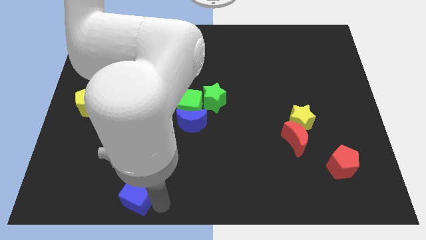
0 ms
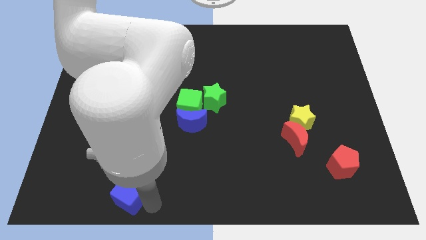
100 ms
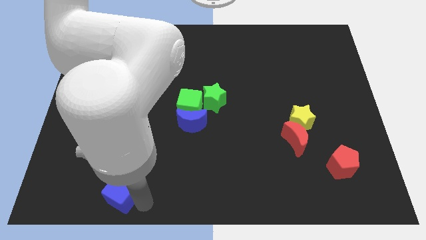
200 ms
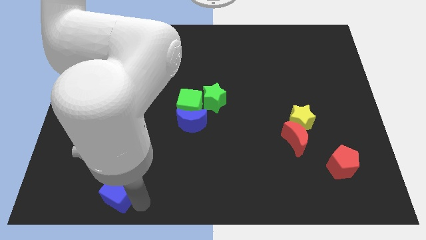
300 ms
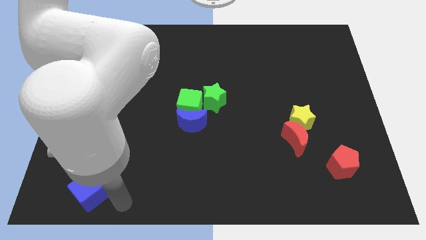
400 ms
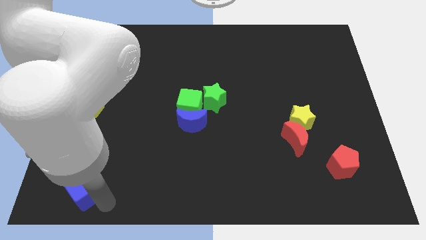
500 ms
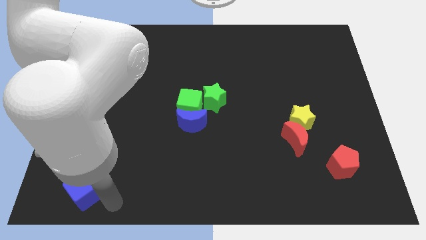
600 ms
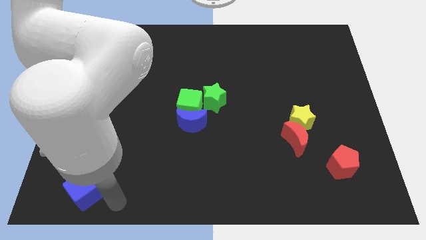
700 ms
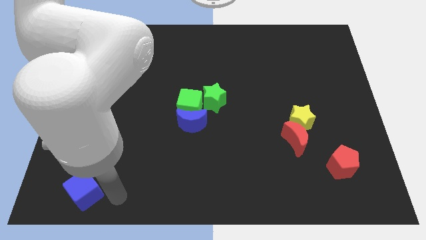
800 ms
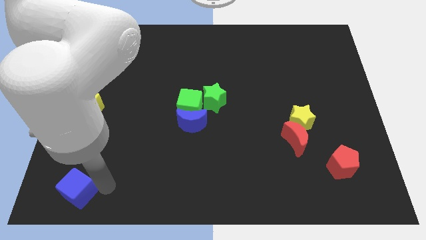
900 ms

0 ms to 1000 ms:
push blue cube below yellow pentagon

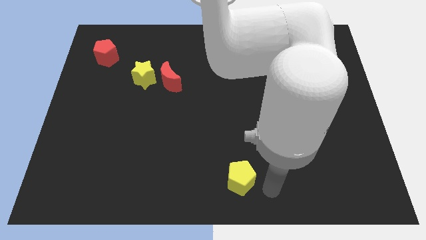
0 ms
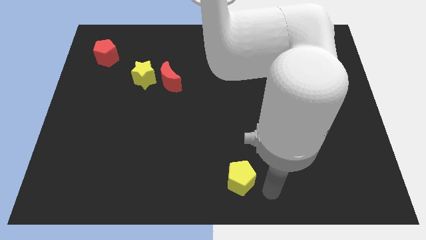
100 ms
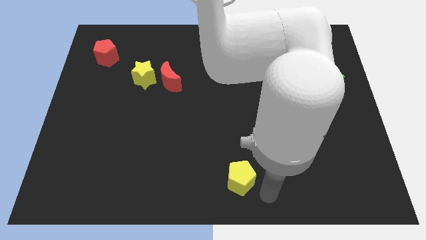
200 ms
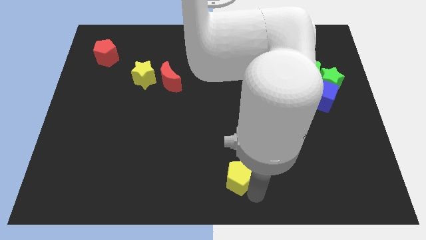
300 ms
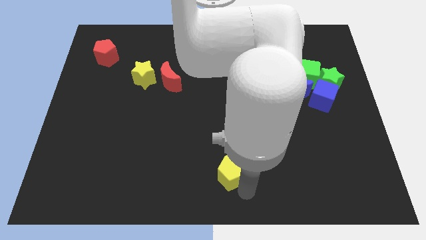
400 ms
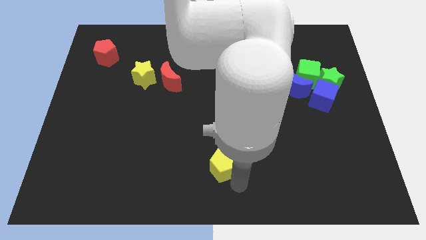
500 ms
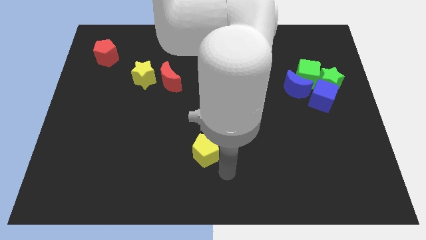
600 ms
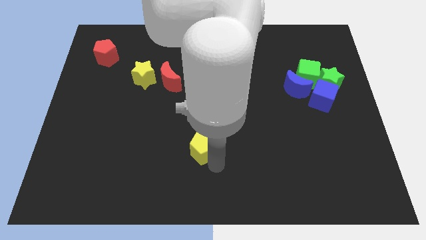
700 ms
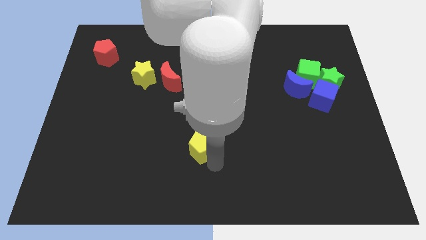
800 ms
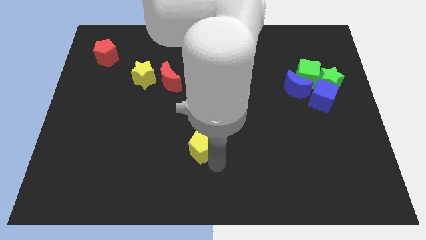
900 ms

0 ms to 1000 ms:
move the yellow pentagon towards the top of the board

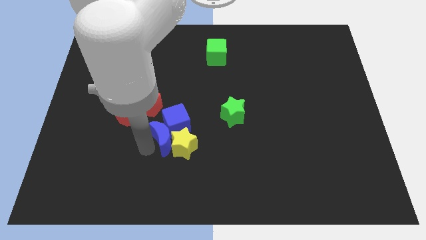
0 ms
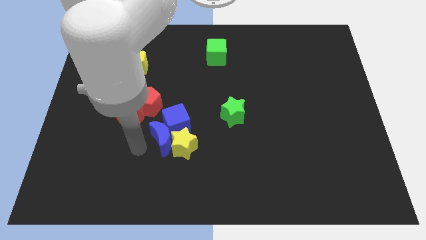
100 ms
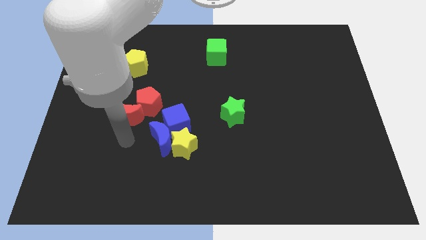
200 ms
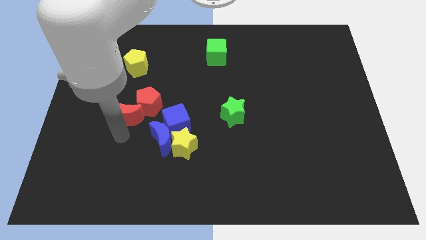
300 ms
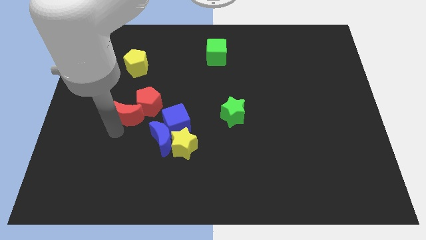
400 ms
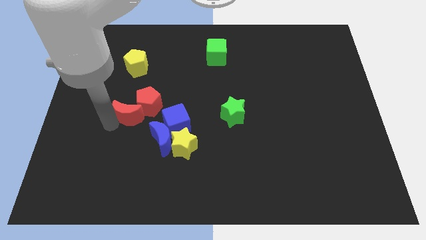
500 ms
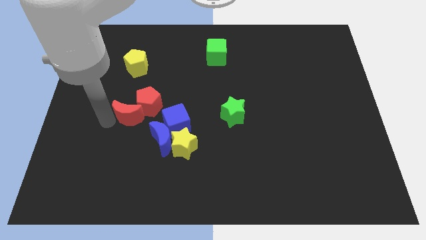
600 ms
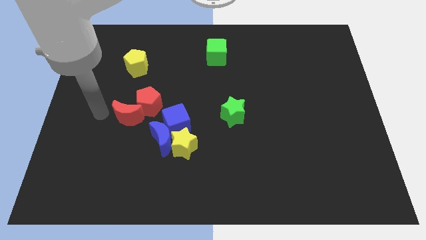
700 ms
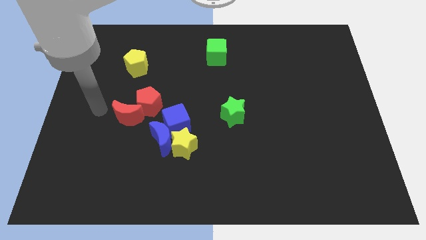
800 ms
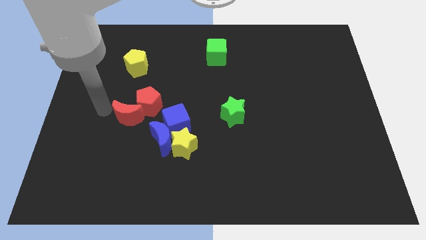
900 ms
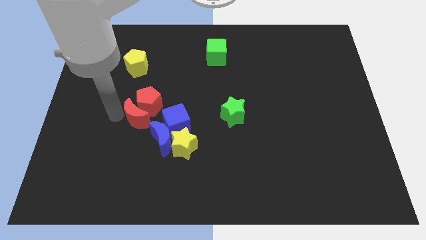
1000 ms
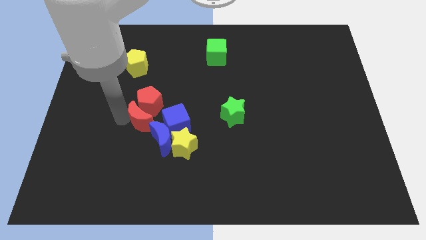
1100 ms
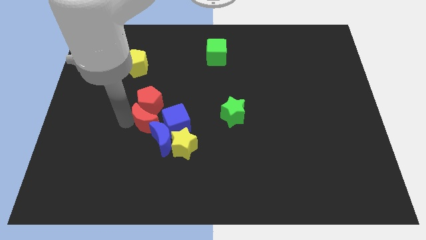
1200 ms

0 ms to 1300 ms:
move the red crescent to the bottom of the red pentagon

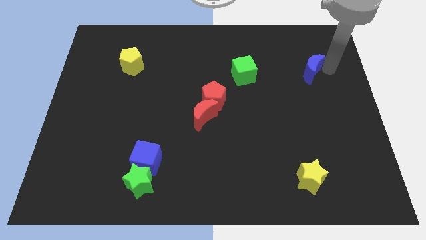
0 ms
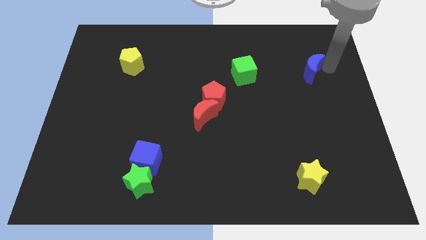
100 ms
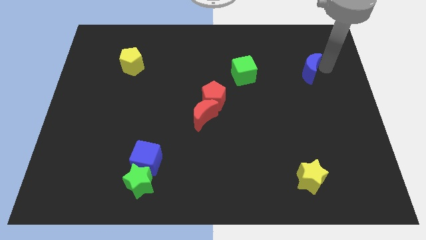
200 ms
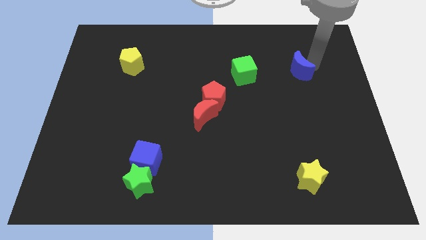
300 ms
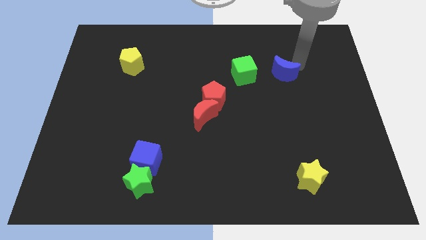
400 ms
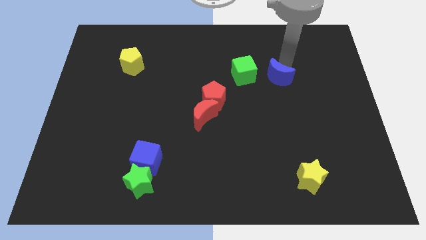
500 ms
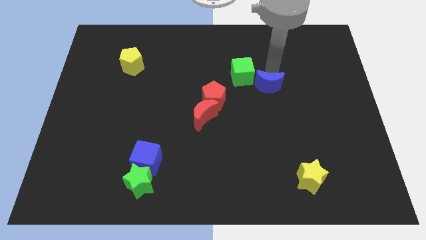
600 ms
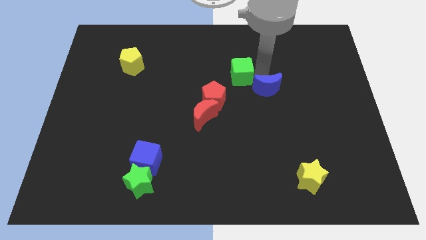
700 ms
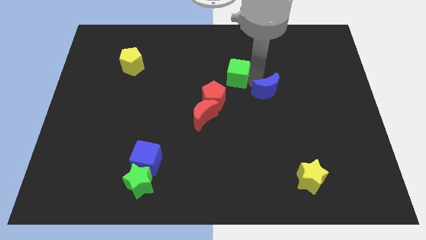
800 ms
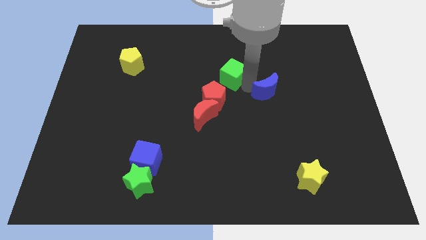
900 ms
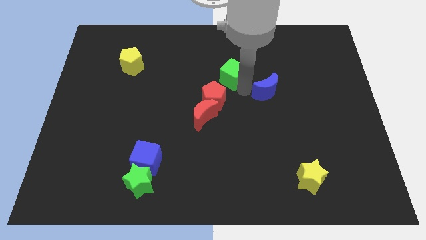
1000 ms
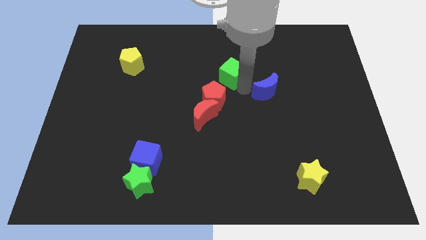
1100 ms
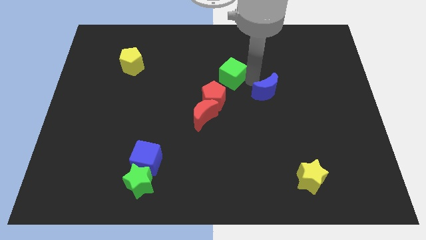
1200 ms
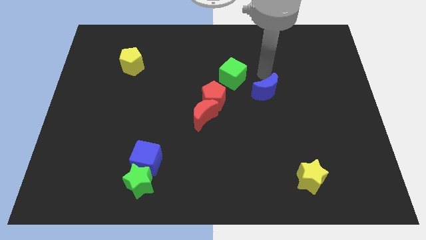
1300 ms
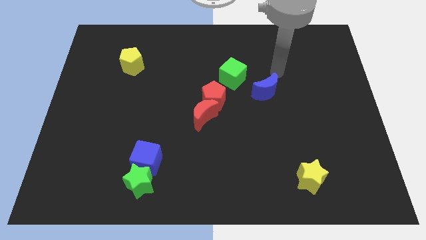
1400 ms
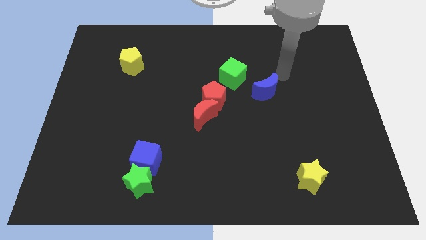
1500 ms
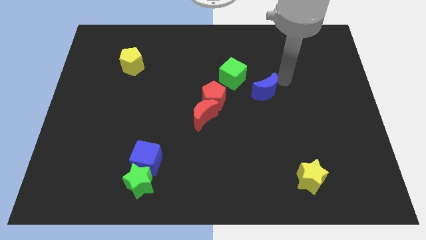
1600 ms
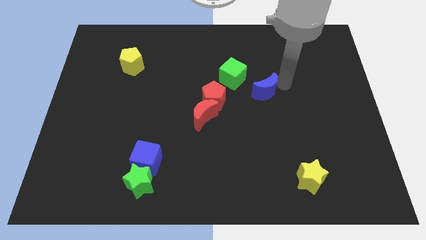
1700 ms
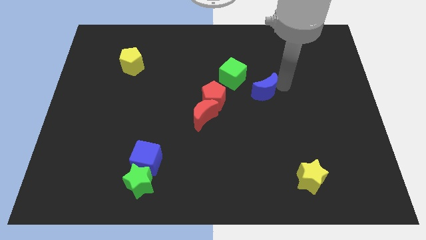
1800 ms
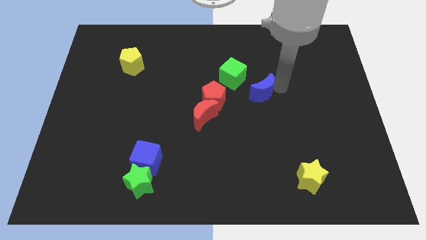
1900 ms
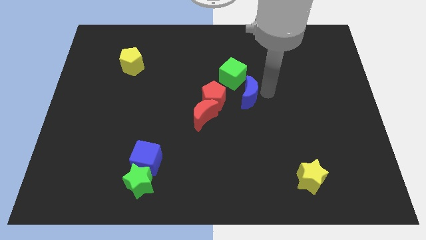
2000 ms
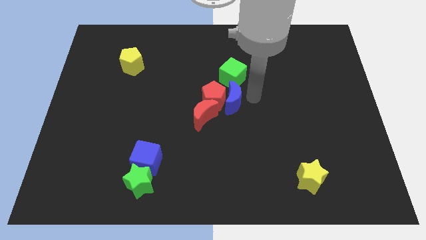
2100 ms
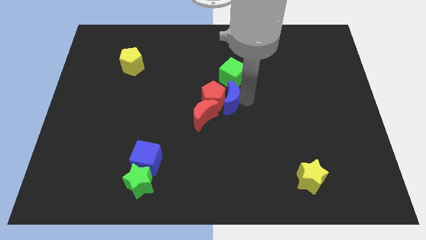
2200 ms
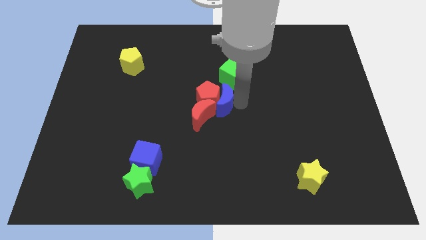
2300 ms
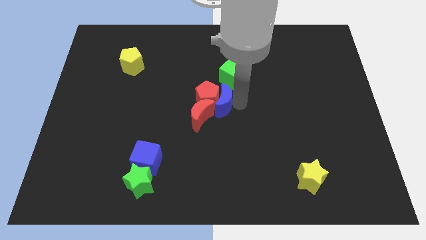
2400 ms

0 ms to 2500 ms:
push the blue crescent into the red blocks

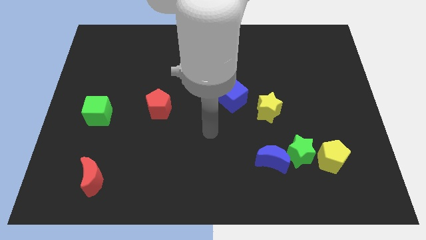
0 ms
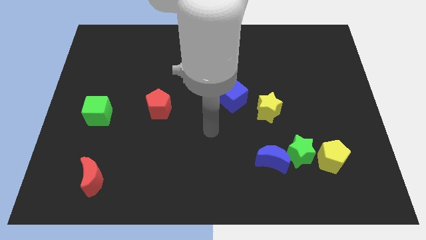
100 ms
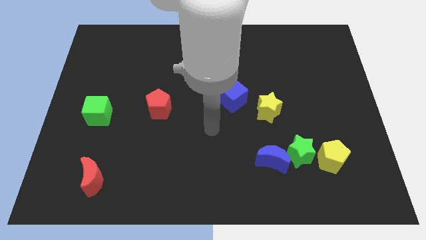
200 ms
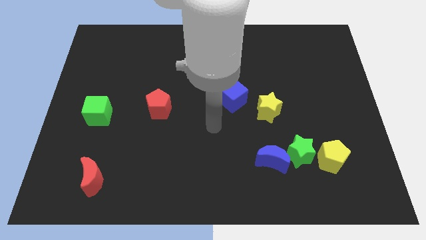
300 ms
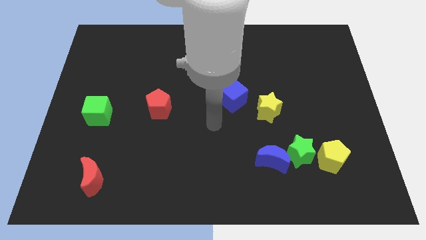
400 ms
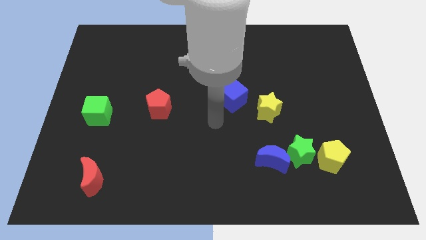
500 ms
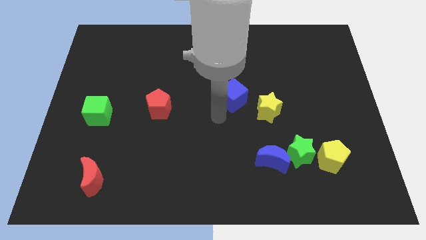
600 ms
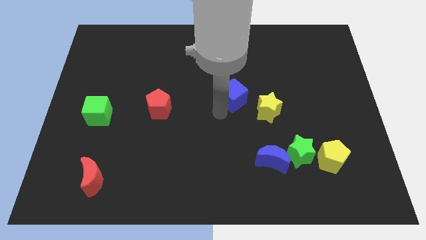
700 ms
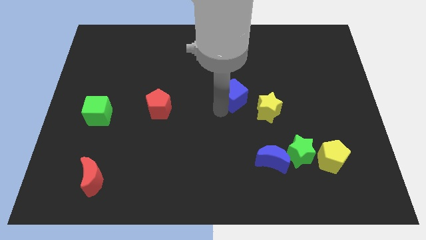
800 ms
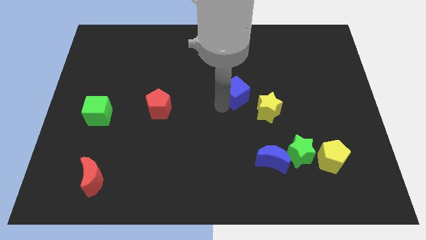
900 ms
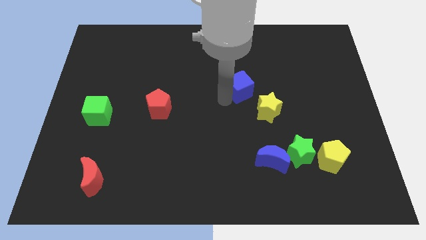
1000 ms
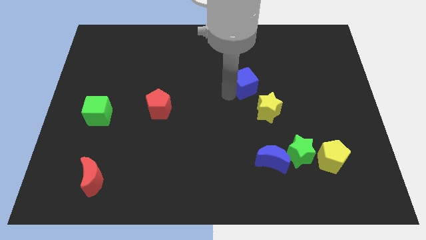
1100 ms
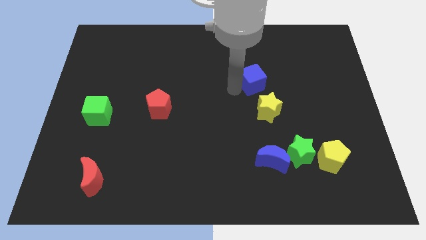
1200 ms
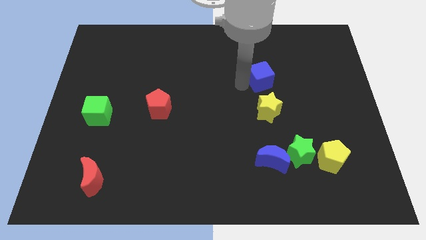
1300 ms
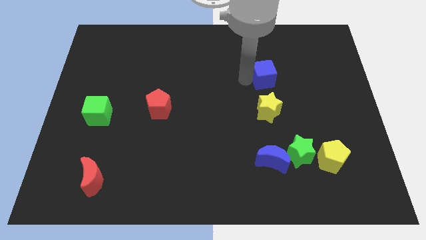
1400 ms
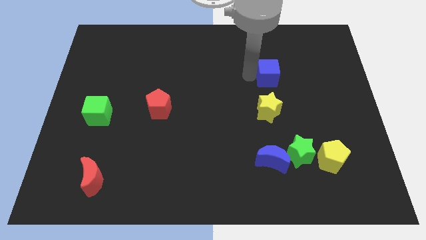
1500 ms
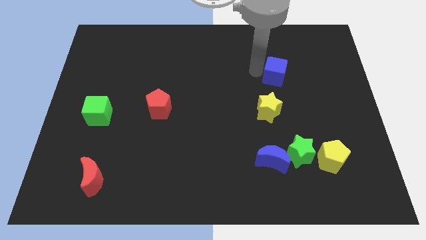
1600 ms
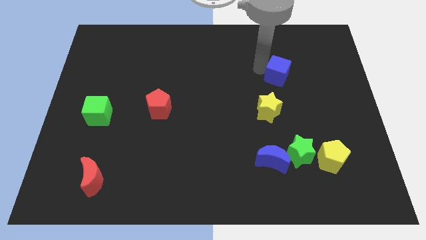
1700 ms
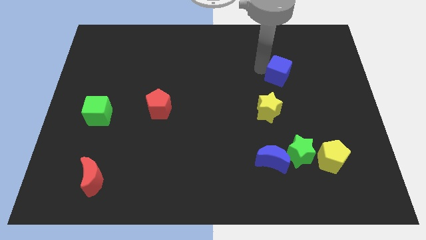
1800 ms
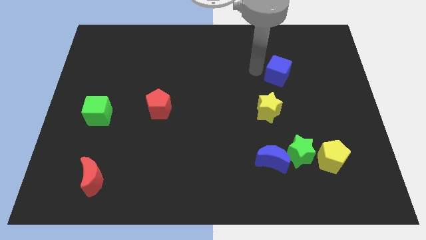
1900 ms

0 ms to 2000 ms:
place the blue cube above the yellow star

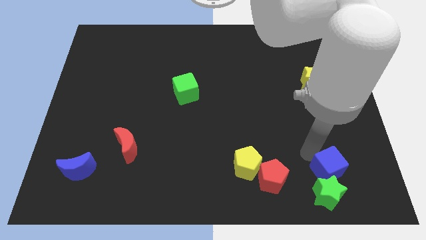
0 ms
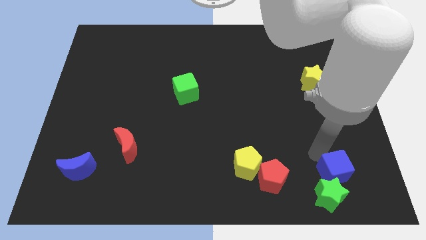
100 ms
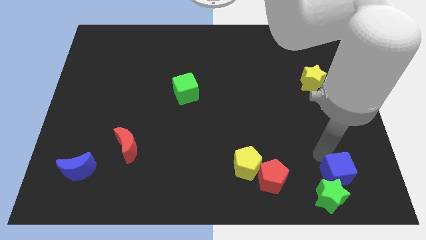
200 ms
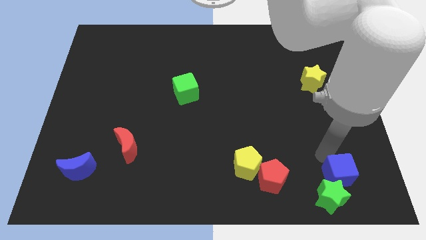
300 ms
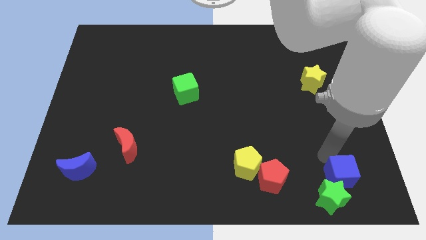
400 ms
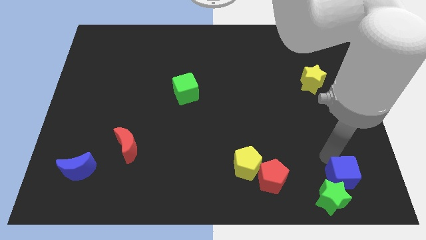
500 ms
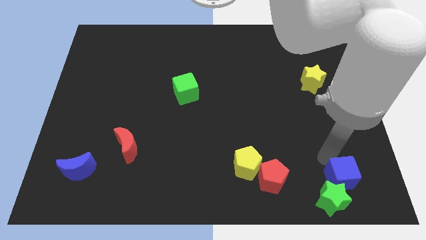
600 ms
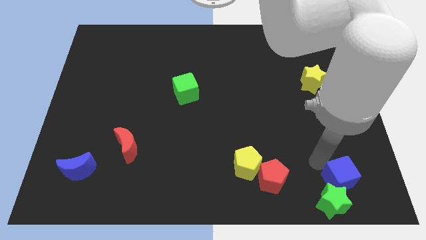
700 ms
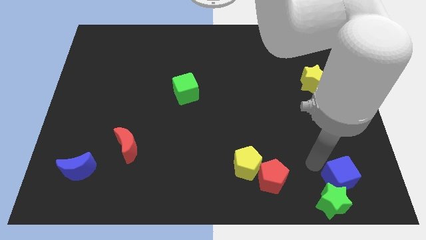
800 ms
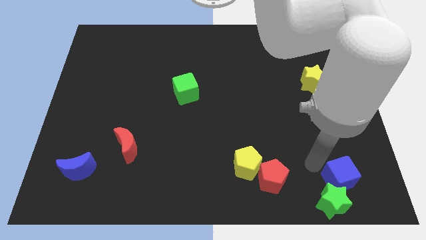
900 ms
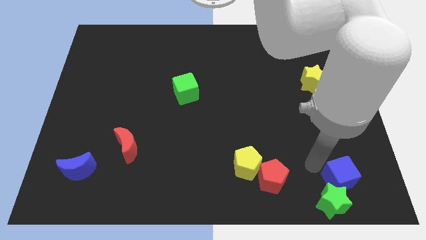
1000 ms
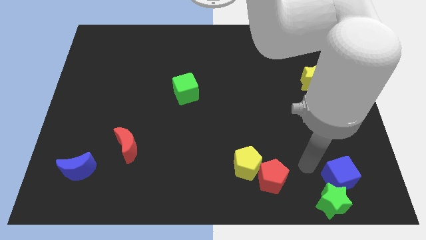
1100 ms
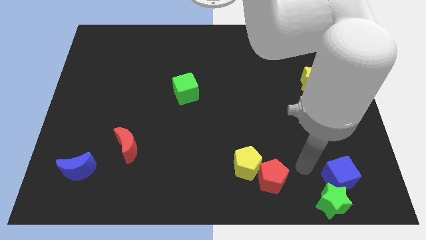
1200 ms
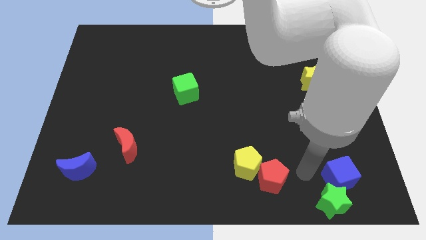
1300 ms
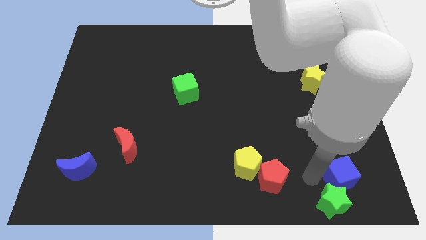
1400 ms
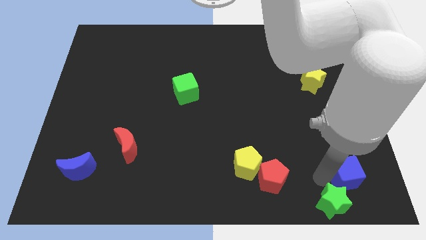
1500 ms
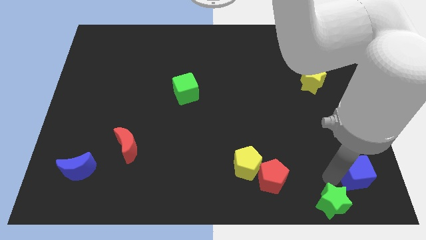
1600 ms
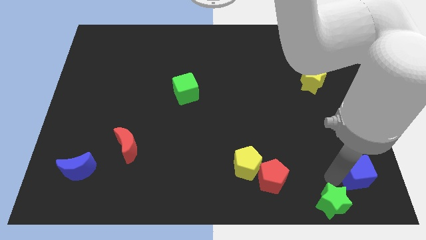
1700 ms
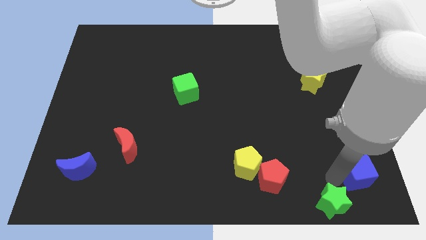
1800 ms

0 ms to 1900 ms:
slightly push the bluue cube to the right side
